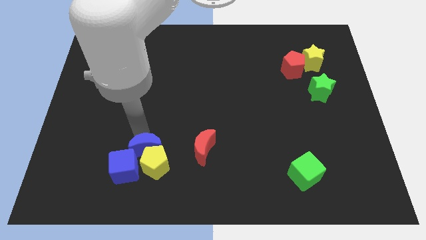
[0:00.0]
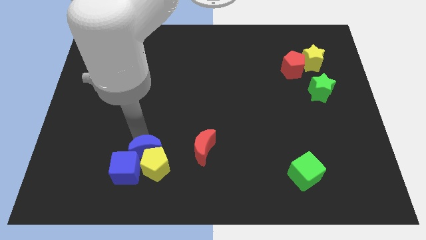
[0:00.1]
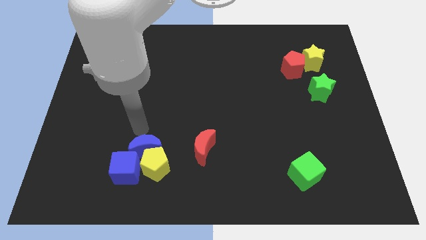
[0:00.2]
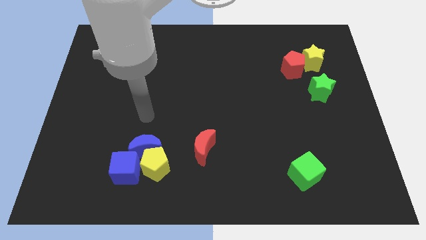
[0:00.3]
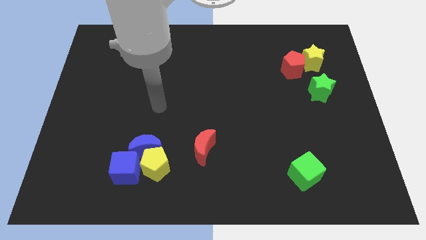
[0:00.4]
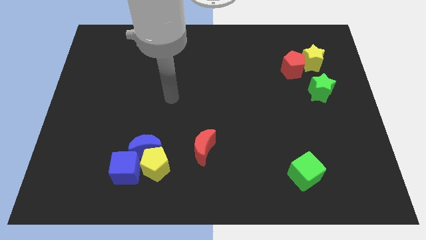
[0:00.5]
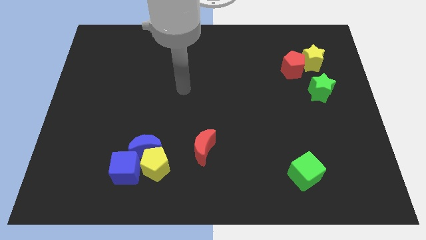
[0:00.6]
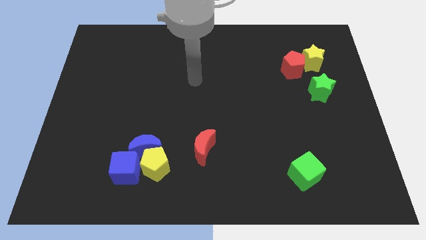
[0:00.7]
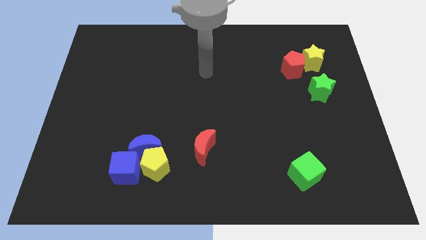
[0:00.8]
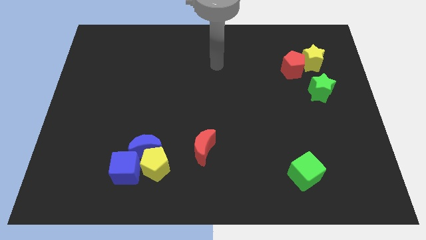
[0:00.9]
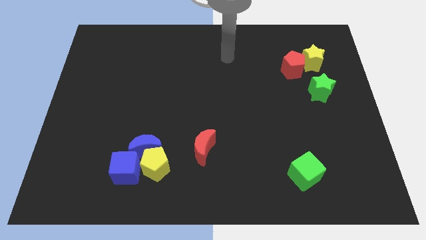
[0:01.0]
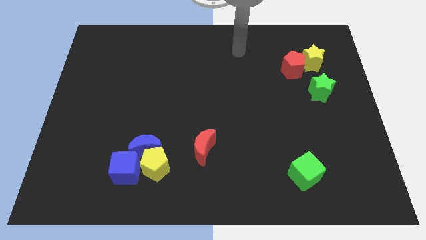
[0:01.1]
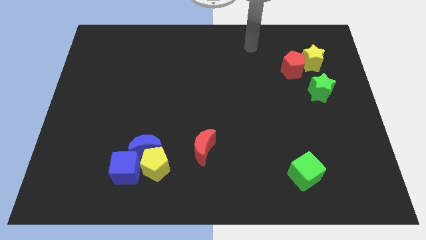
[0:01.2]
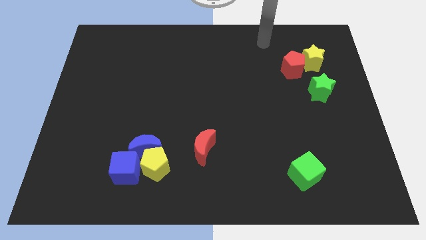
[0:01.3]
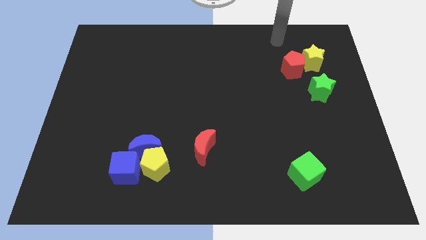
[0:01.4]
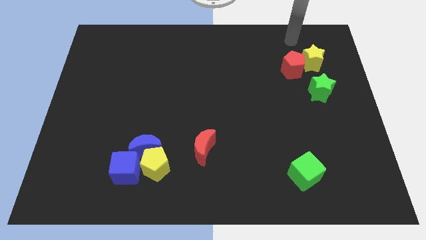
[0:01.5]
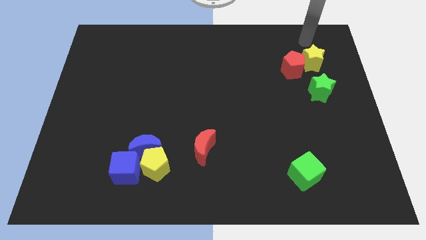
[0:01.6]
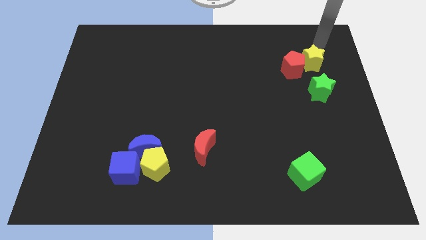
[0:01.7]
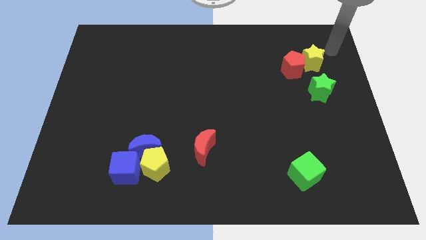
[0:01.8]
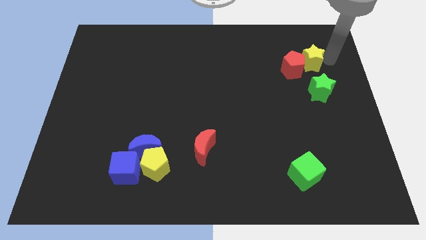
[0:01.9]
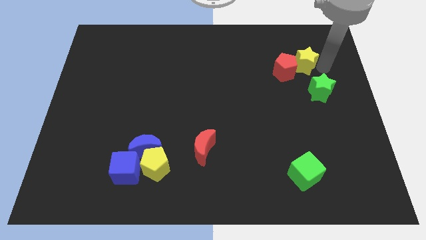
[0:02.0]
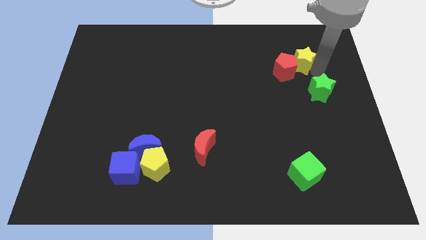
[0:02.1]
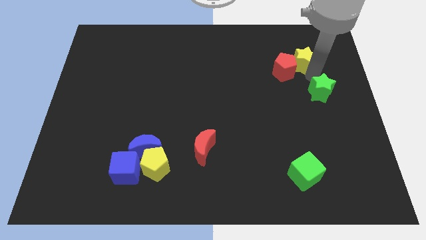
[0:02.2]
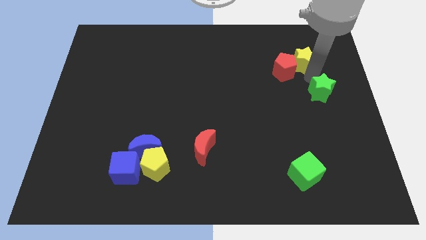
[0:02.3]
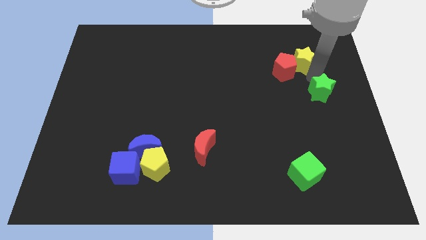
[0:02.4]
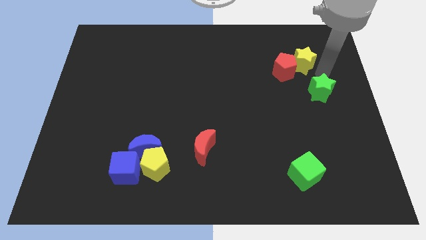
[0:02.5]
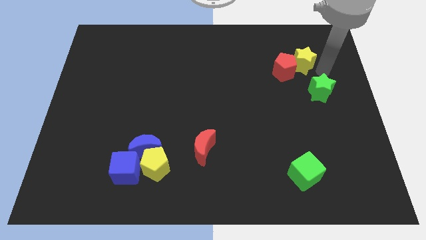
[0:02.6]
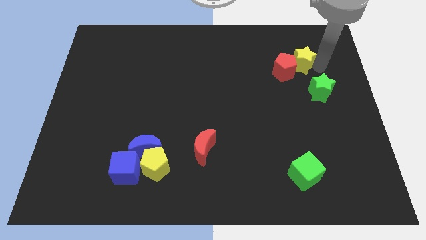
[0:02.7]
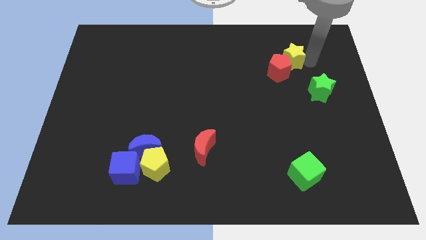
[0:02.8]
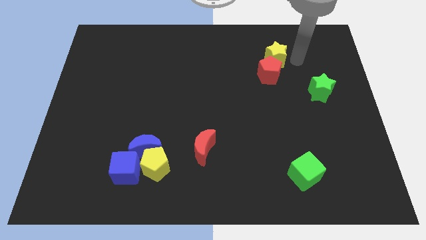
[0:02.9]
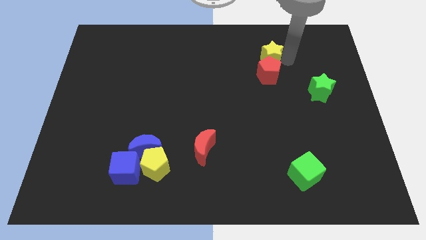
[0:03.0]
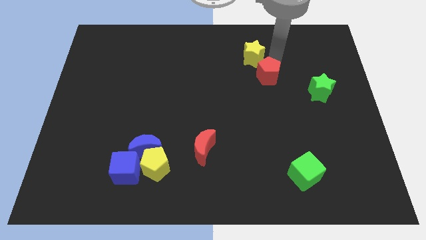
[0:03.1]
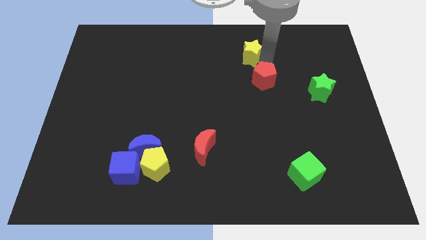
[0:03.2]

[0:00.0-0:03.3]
move the yellow star and red pentagon to the left side of the table

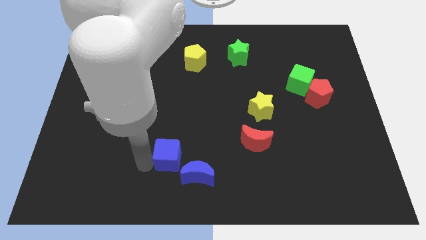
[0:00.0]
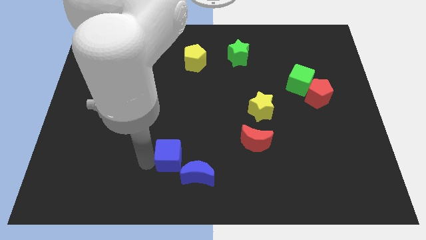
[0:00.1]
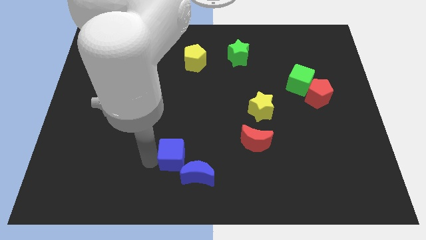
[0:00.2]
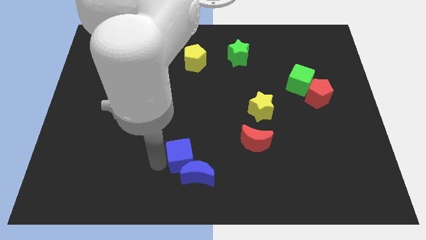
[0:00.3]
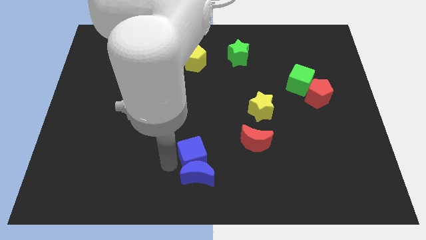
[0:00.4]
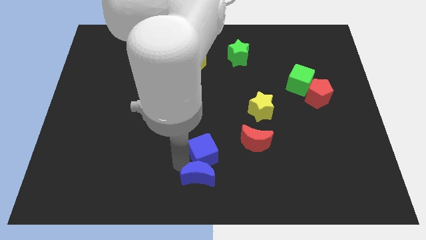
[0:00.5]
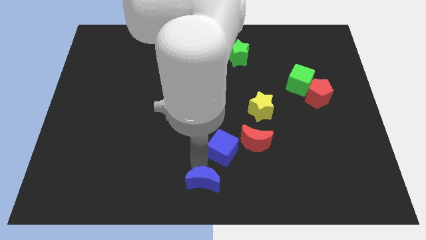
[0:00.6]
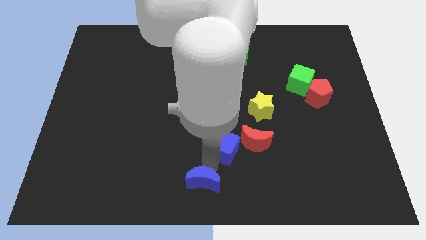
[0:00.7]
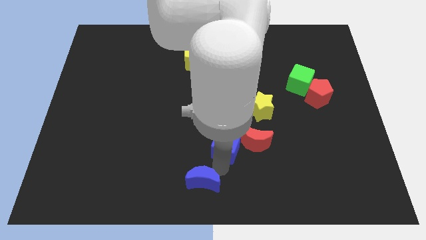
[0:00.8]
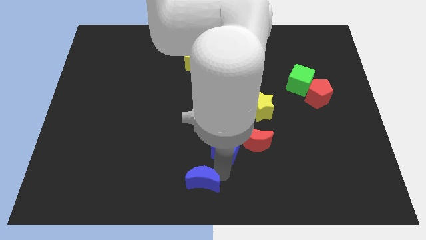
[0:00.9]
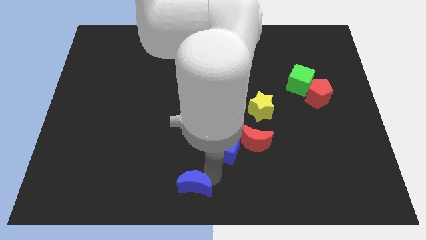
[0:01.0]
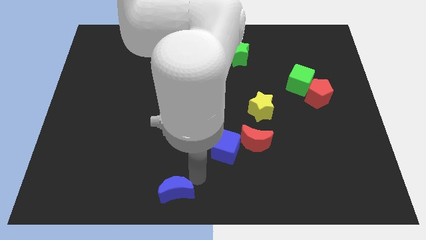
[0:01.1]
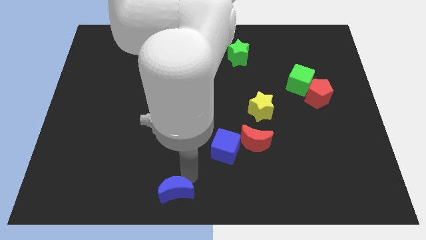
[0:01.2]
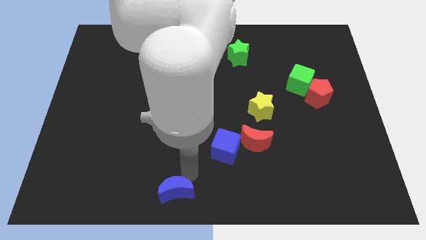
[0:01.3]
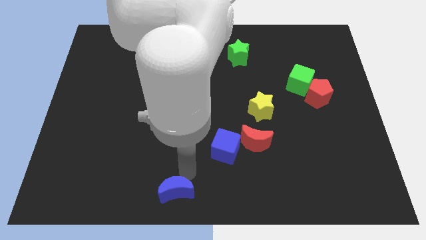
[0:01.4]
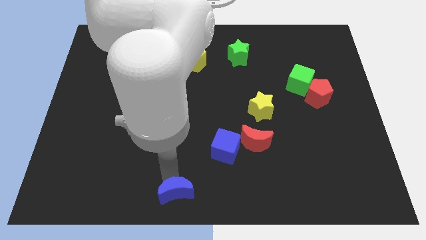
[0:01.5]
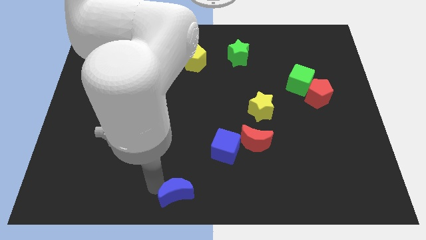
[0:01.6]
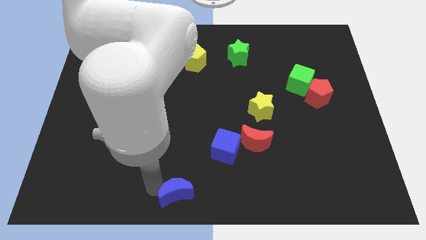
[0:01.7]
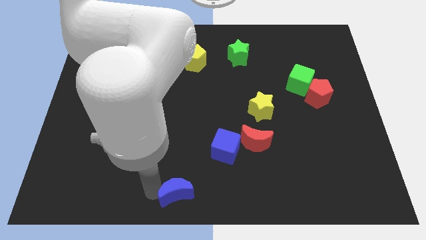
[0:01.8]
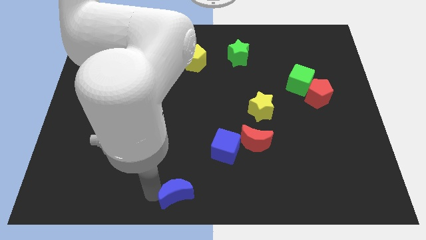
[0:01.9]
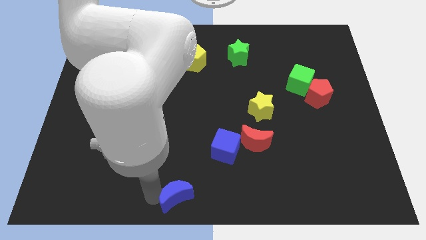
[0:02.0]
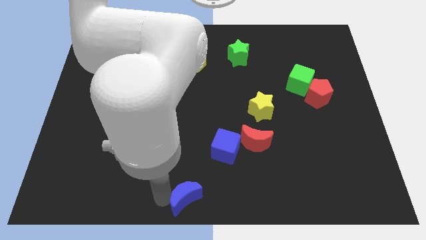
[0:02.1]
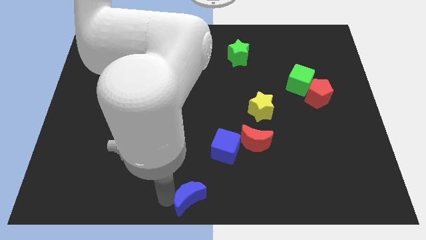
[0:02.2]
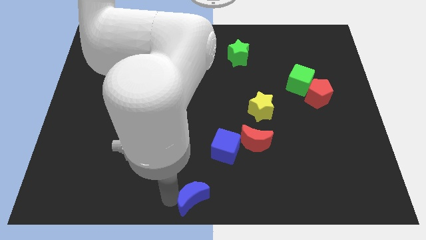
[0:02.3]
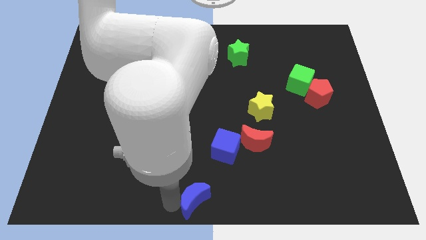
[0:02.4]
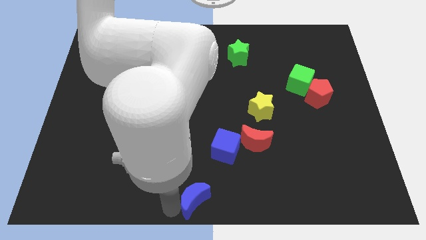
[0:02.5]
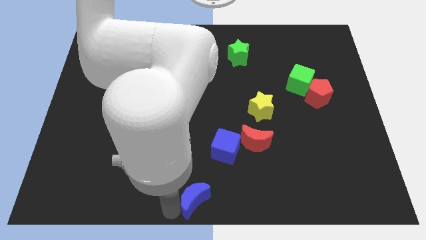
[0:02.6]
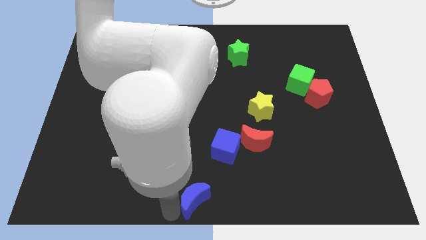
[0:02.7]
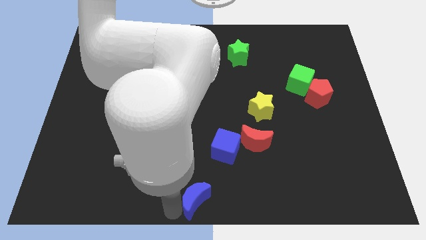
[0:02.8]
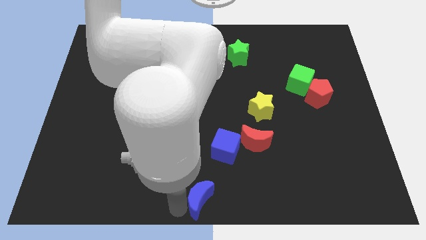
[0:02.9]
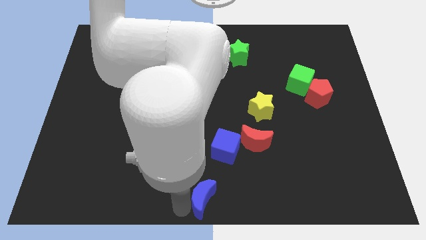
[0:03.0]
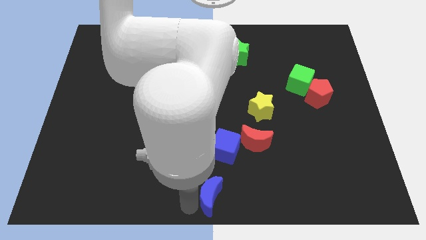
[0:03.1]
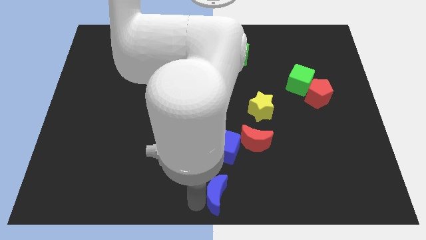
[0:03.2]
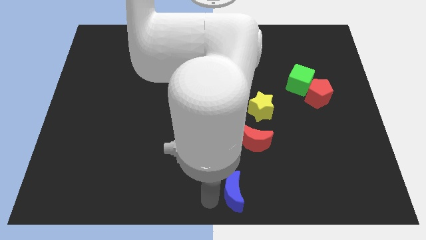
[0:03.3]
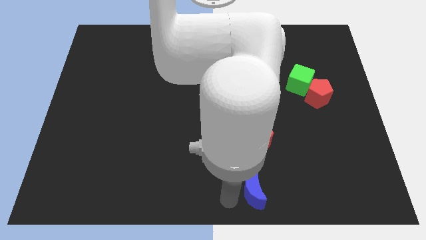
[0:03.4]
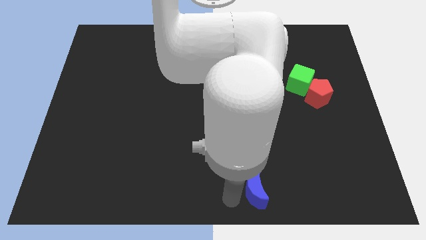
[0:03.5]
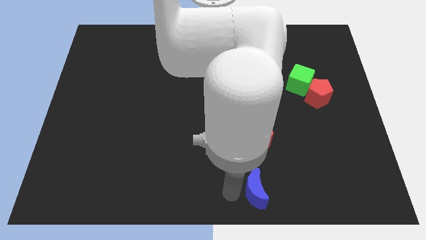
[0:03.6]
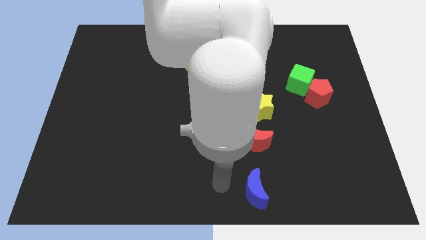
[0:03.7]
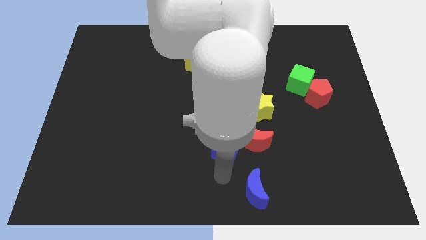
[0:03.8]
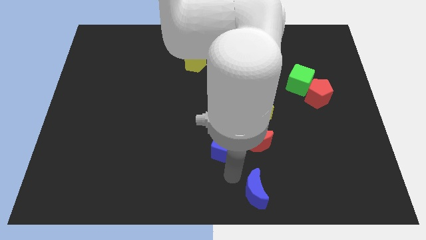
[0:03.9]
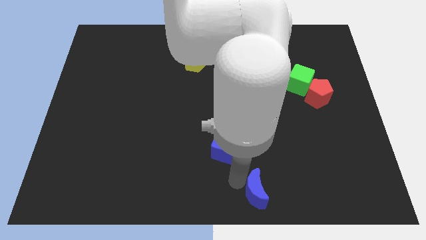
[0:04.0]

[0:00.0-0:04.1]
separate blue moon from blue cube

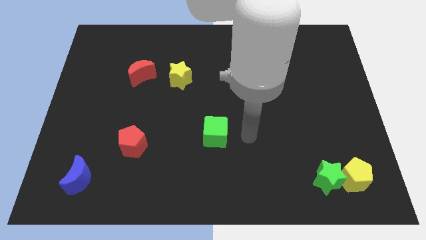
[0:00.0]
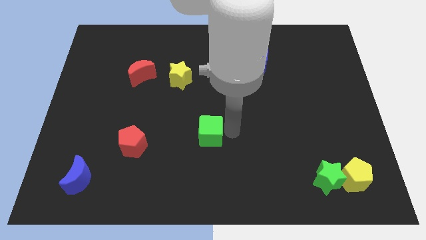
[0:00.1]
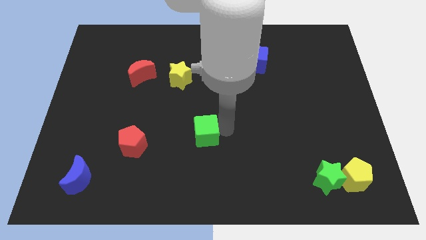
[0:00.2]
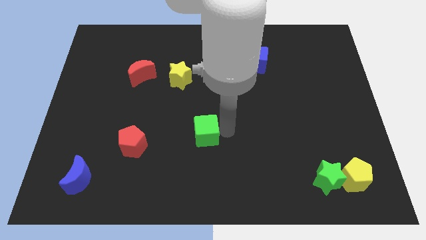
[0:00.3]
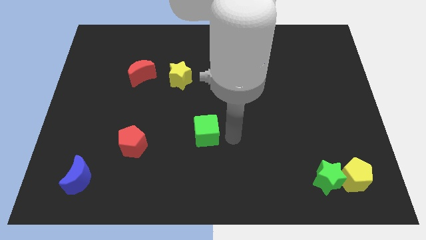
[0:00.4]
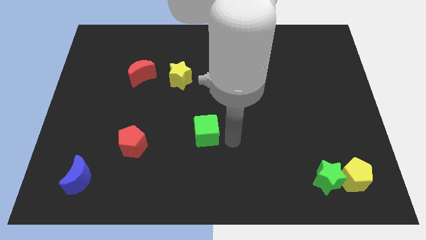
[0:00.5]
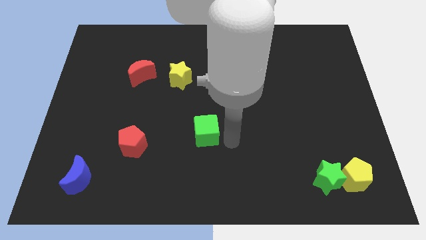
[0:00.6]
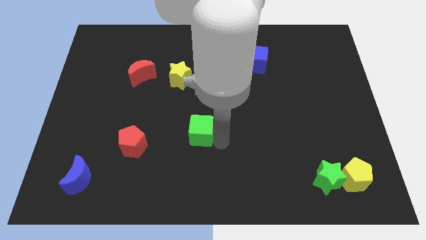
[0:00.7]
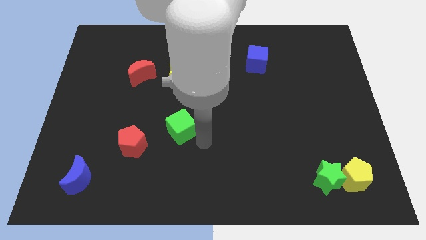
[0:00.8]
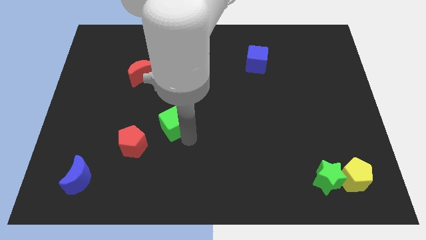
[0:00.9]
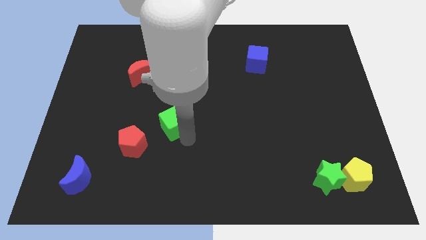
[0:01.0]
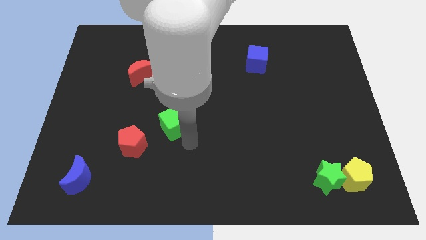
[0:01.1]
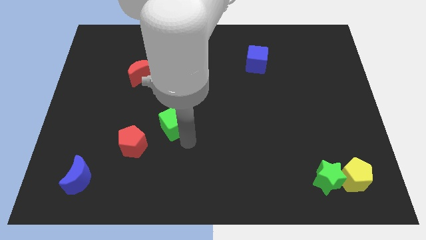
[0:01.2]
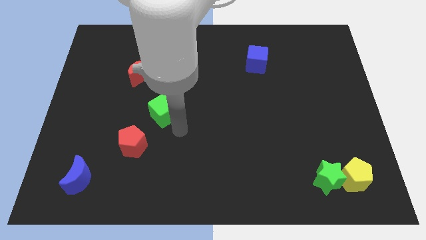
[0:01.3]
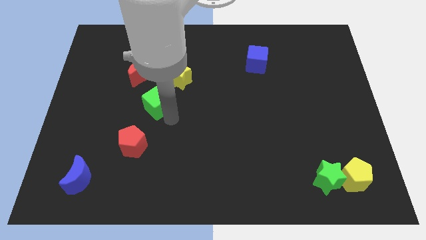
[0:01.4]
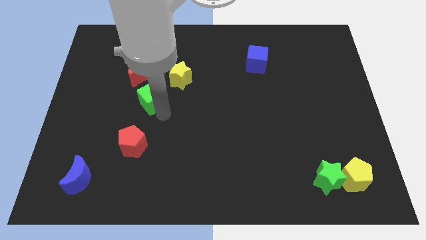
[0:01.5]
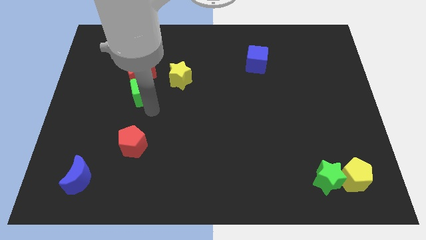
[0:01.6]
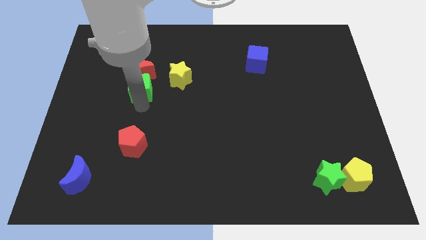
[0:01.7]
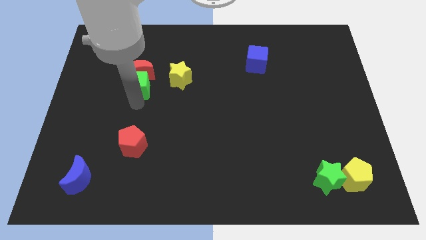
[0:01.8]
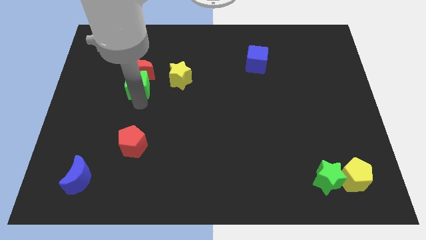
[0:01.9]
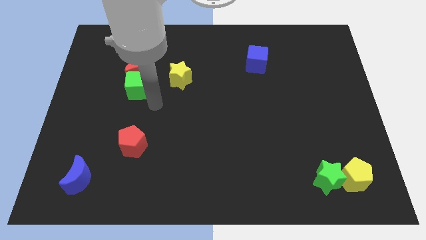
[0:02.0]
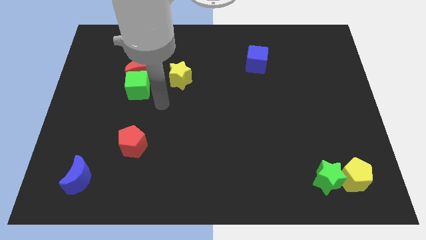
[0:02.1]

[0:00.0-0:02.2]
place the green cube below the red crescent
